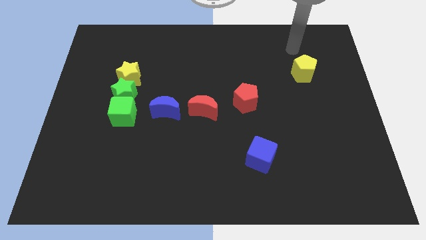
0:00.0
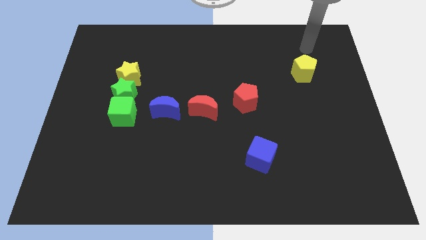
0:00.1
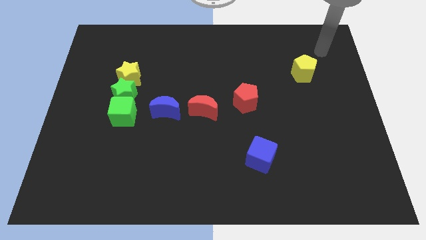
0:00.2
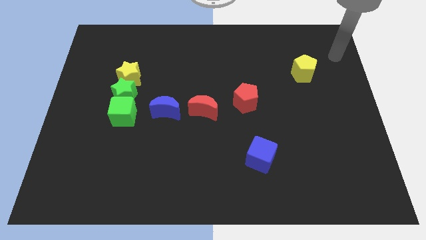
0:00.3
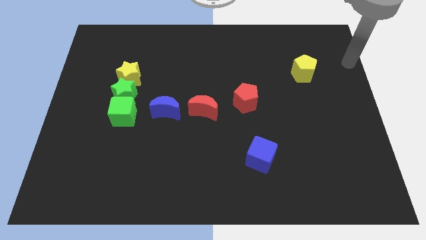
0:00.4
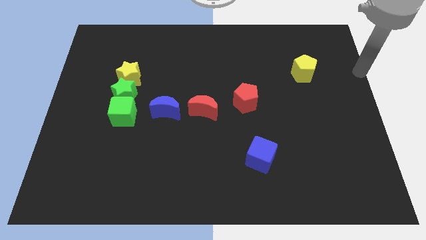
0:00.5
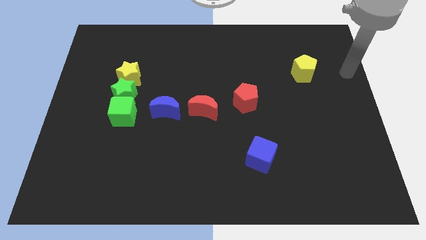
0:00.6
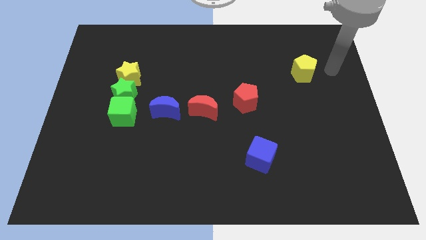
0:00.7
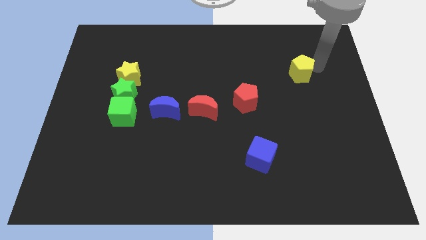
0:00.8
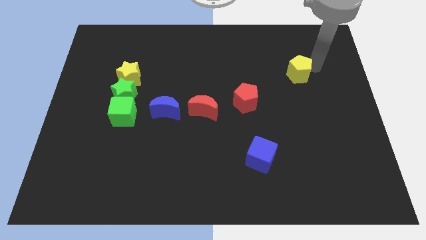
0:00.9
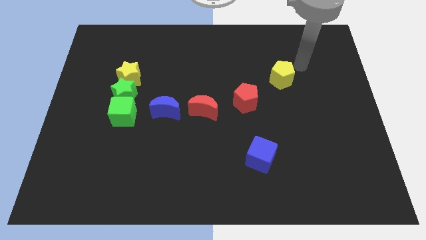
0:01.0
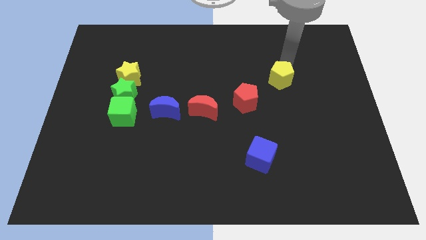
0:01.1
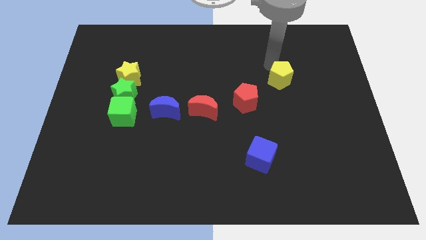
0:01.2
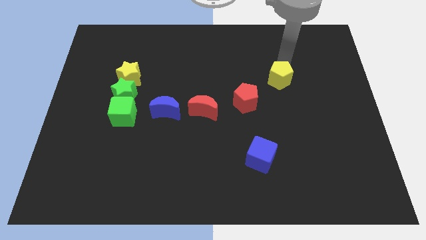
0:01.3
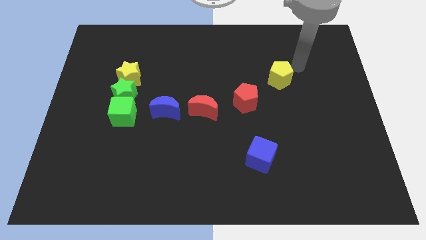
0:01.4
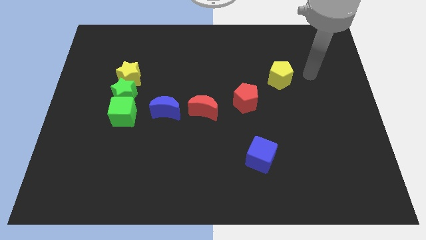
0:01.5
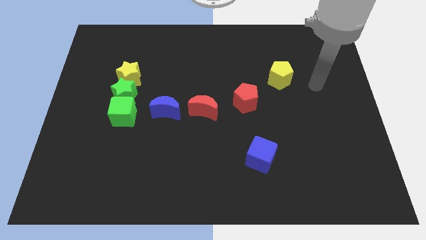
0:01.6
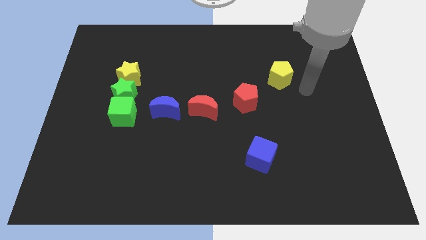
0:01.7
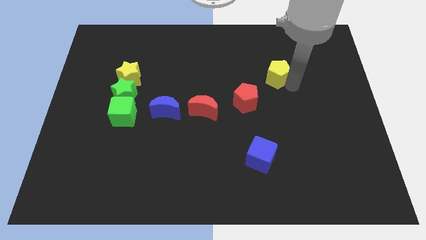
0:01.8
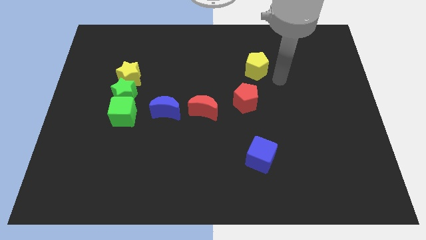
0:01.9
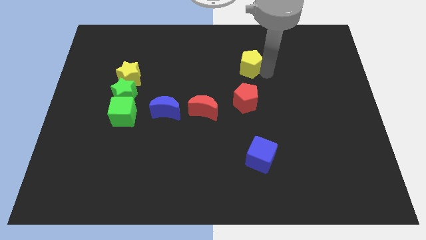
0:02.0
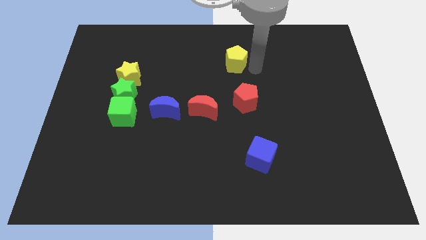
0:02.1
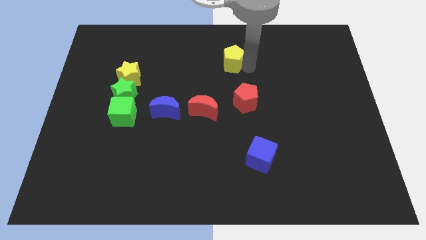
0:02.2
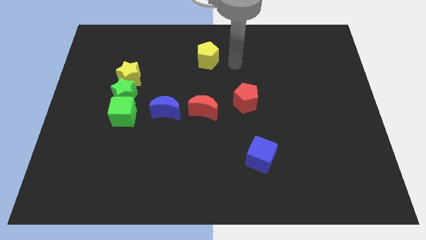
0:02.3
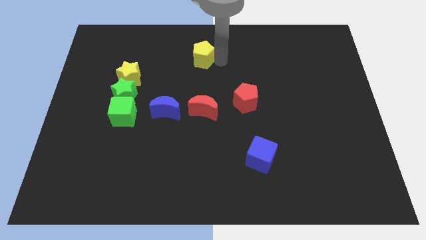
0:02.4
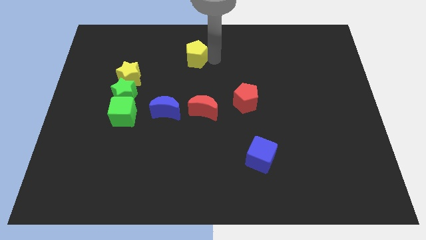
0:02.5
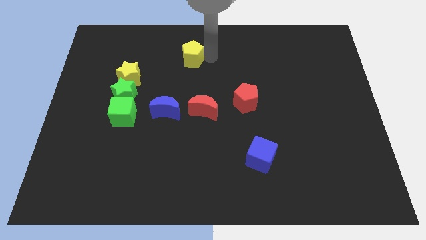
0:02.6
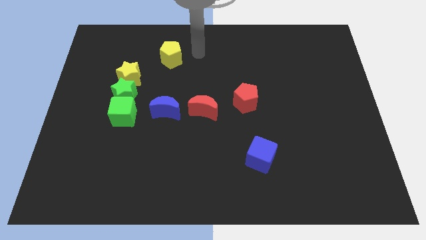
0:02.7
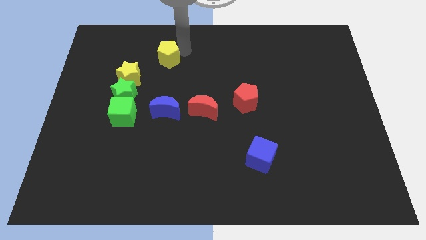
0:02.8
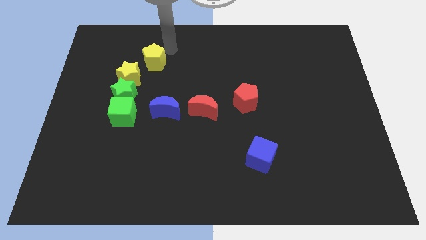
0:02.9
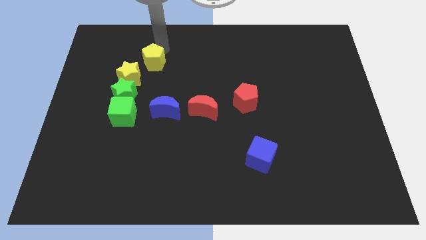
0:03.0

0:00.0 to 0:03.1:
push the yellow pentagon to the top right side of the yellow star

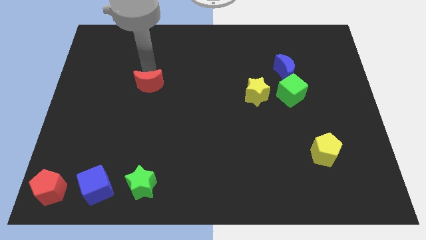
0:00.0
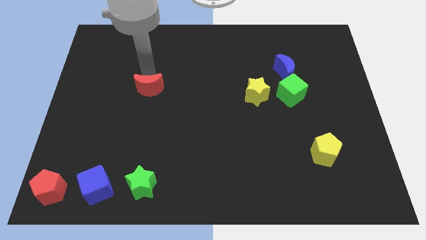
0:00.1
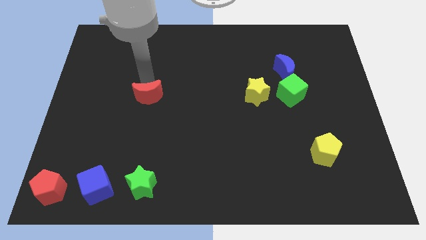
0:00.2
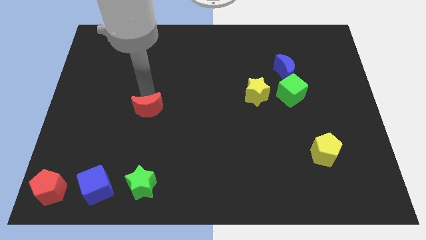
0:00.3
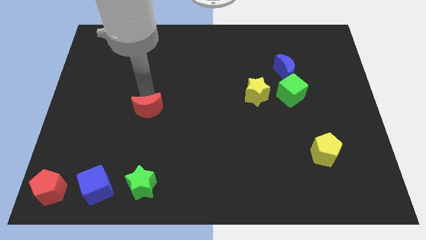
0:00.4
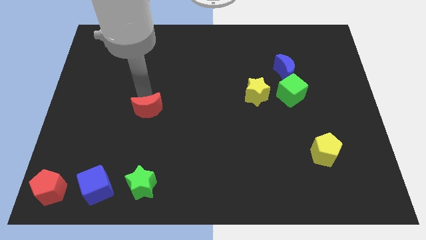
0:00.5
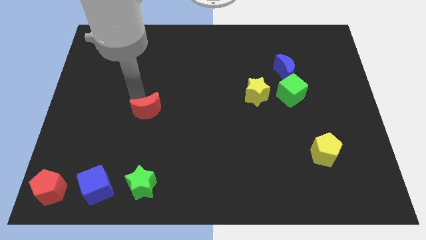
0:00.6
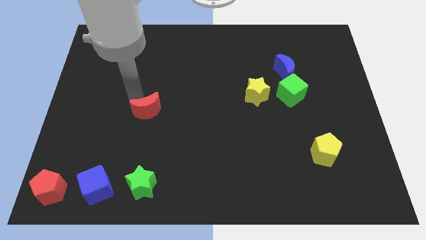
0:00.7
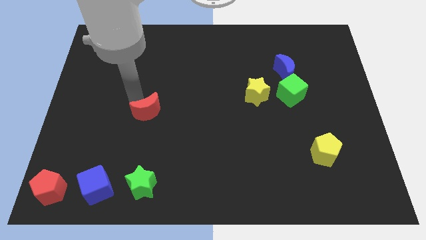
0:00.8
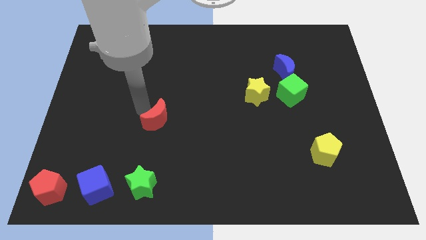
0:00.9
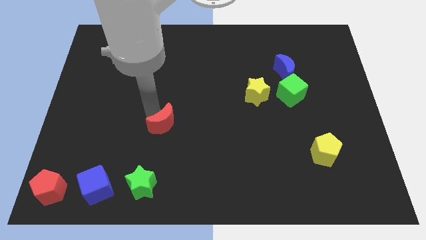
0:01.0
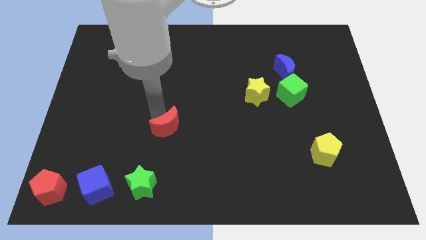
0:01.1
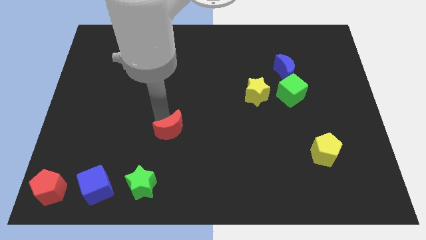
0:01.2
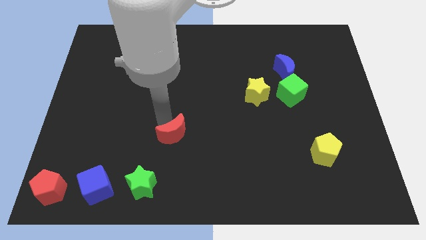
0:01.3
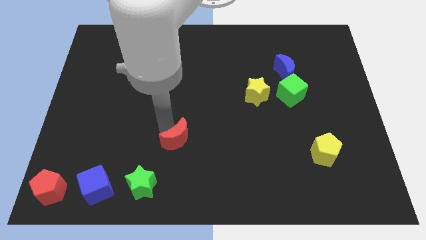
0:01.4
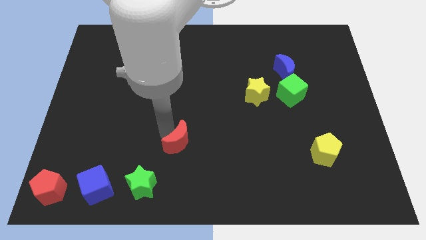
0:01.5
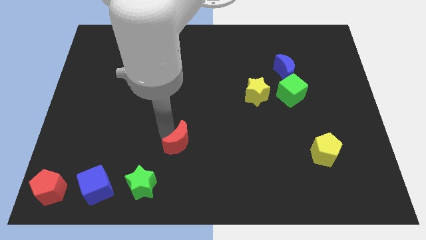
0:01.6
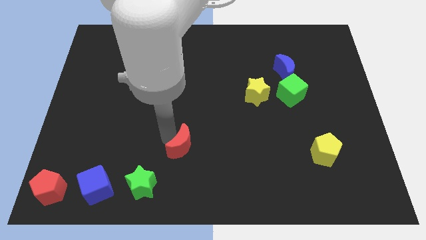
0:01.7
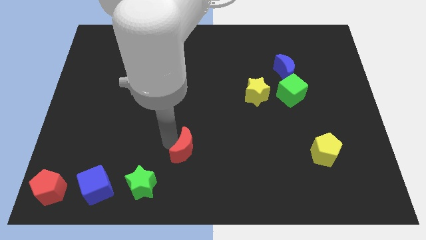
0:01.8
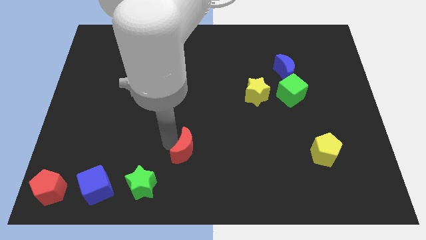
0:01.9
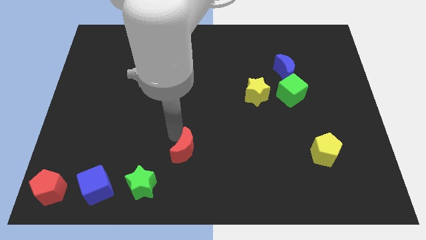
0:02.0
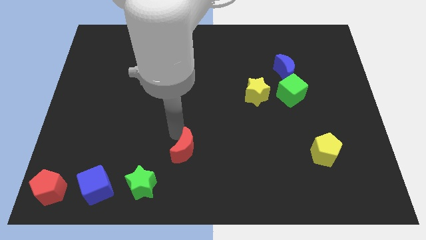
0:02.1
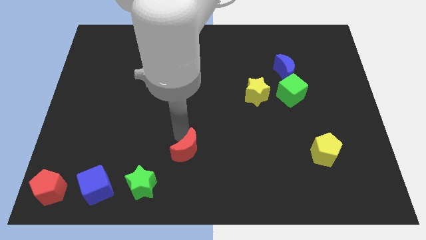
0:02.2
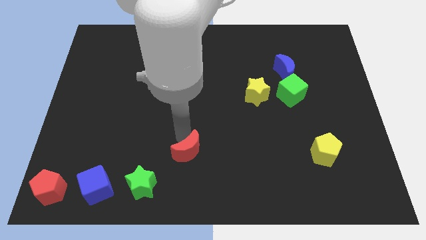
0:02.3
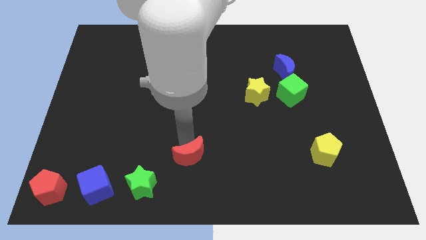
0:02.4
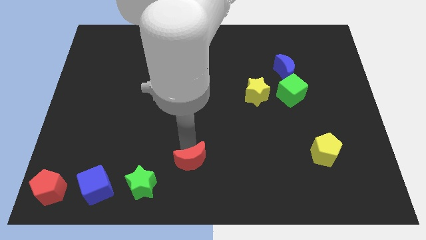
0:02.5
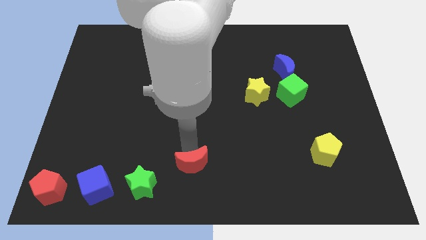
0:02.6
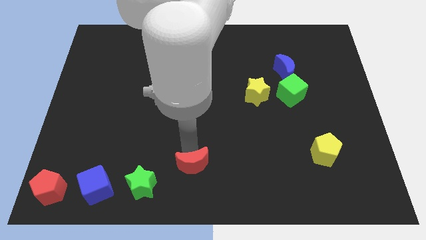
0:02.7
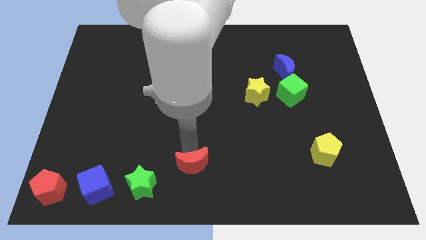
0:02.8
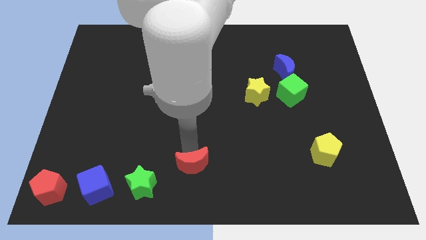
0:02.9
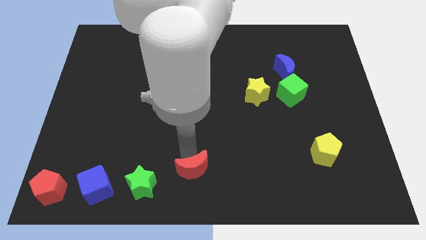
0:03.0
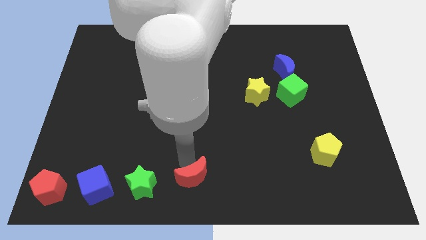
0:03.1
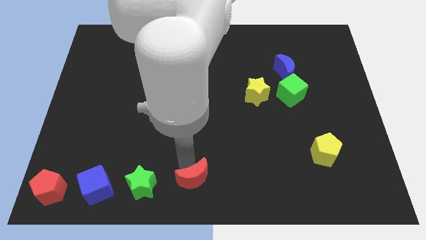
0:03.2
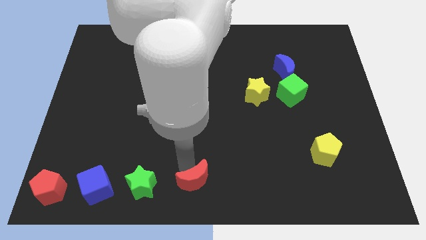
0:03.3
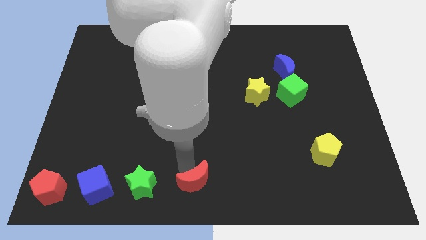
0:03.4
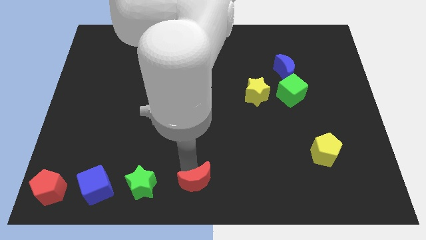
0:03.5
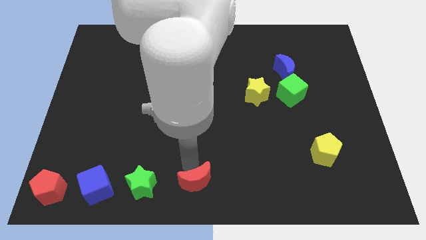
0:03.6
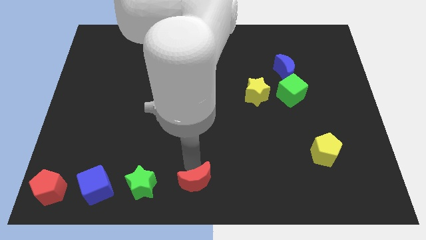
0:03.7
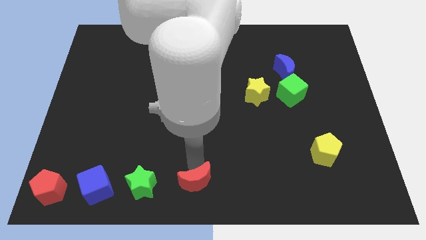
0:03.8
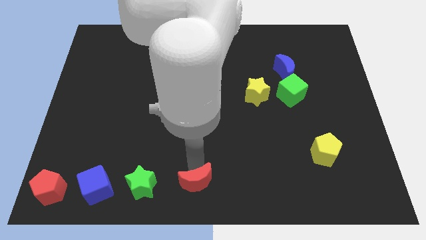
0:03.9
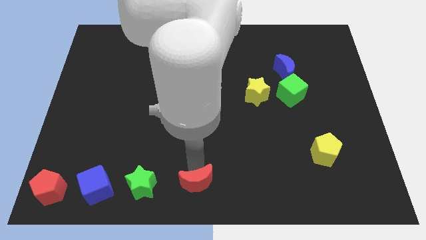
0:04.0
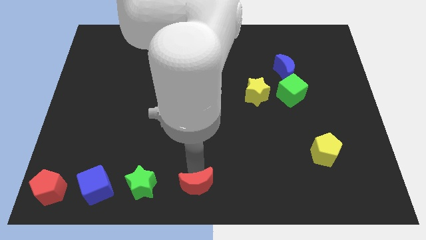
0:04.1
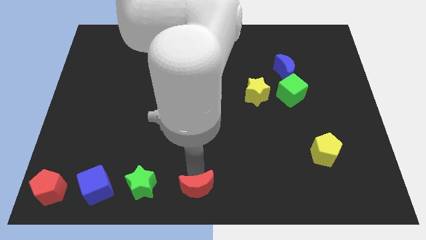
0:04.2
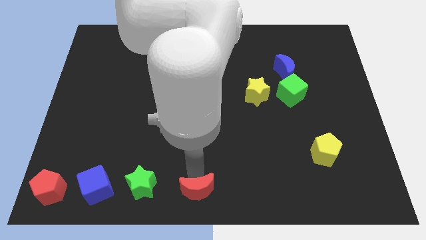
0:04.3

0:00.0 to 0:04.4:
place red crescent to right of green star

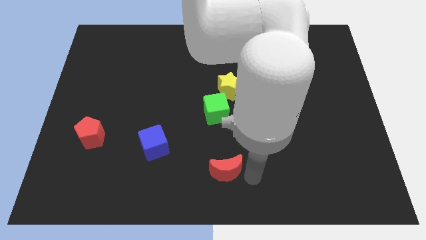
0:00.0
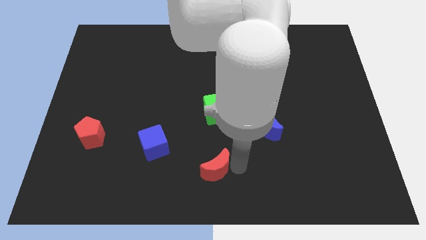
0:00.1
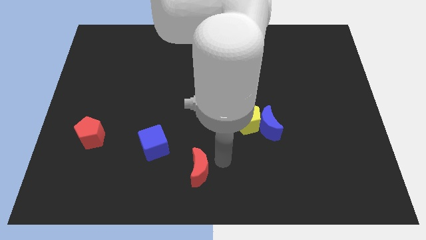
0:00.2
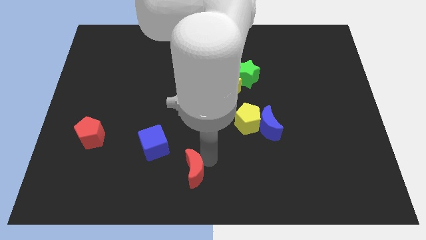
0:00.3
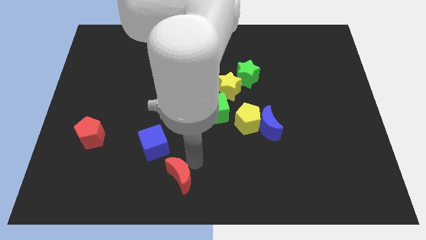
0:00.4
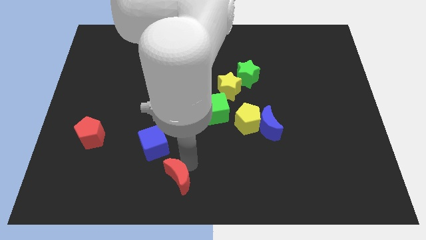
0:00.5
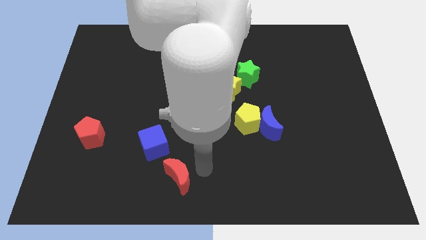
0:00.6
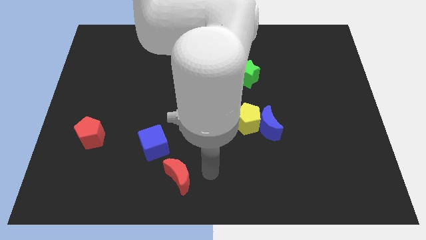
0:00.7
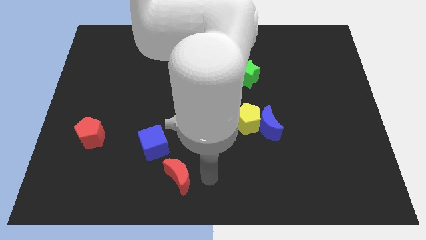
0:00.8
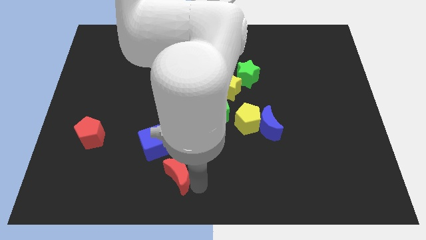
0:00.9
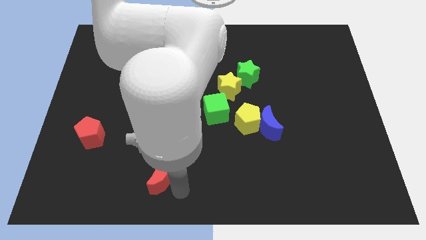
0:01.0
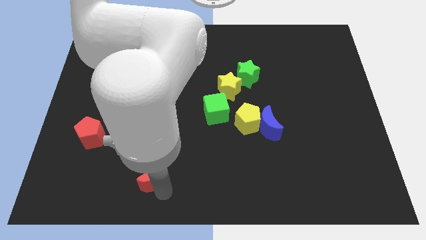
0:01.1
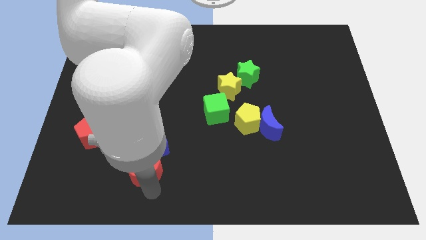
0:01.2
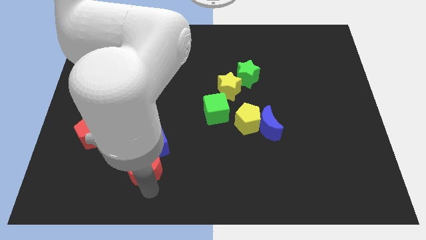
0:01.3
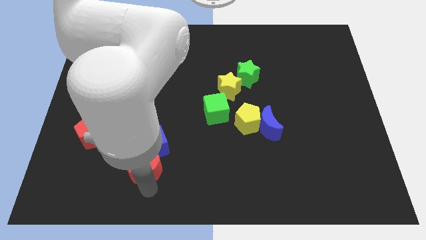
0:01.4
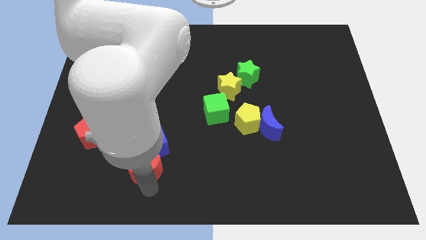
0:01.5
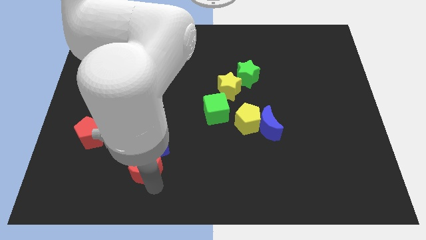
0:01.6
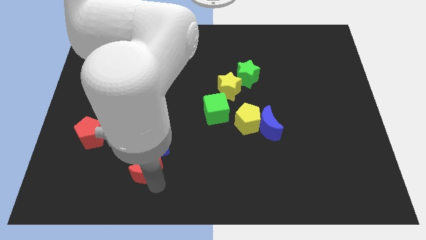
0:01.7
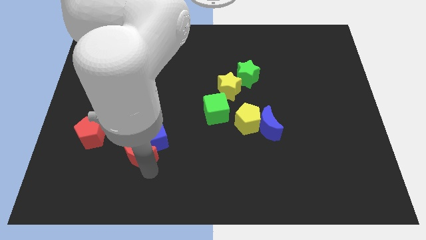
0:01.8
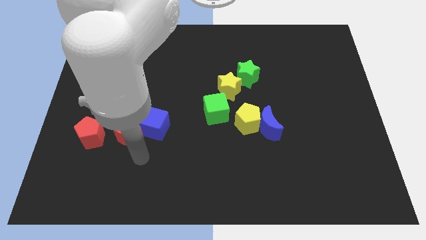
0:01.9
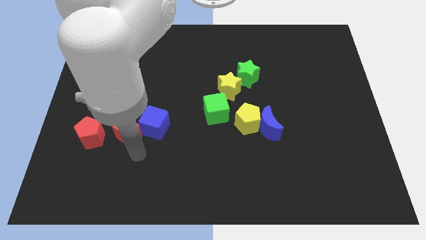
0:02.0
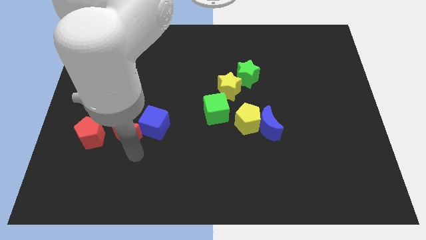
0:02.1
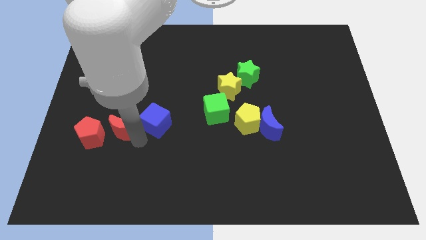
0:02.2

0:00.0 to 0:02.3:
push the red crescent to the left of the blue cube
